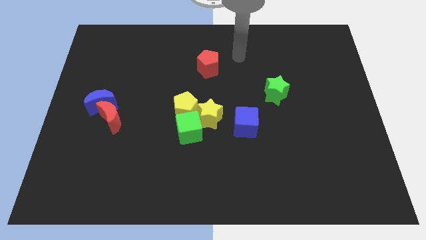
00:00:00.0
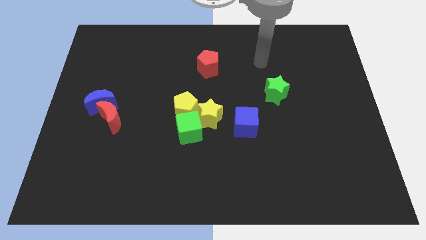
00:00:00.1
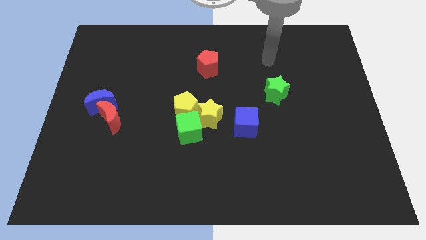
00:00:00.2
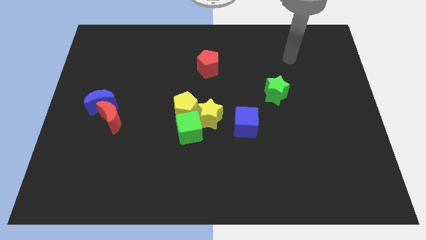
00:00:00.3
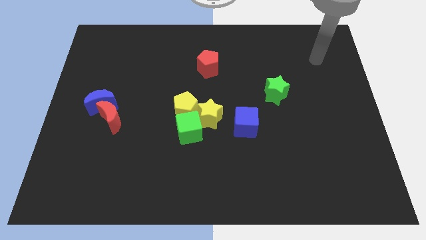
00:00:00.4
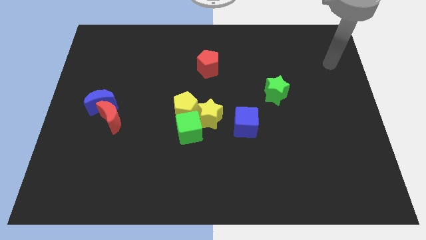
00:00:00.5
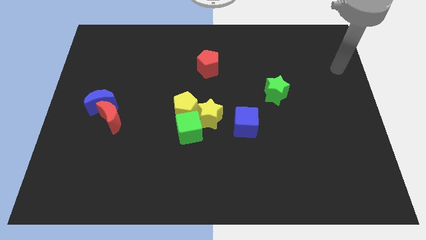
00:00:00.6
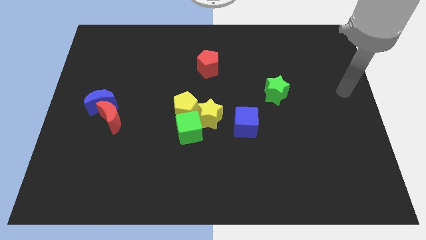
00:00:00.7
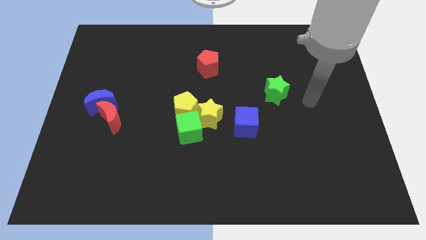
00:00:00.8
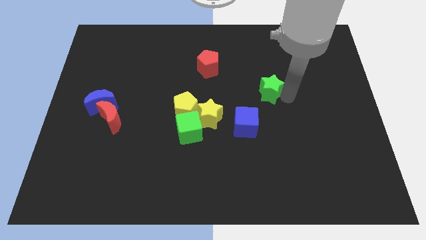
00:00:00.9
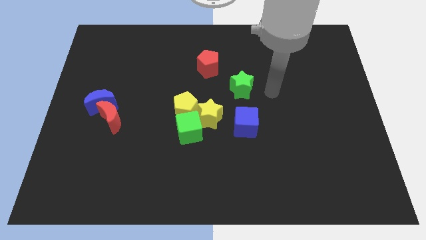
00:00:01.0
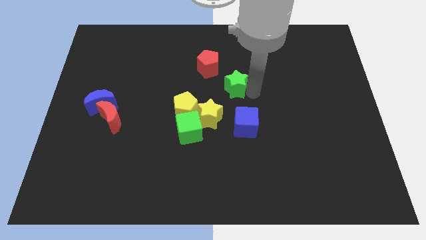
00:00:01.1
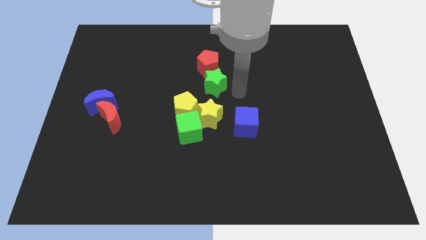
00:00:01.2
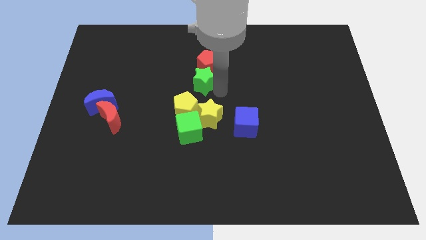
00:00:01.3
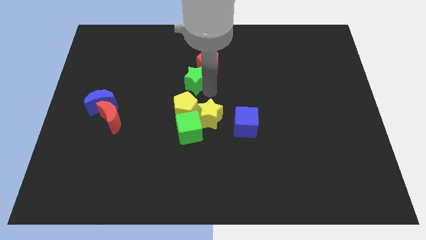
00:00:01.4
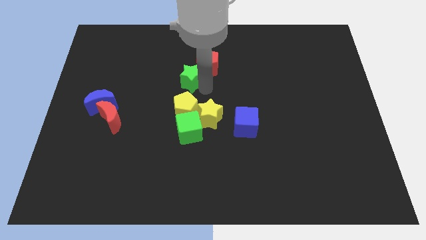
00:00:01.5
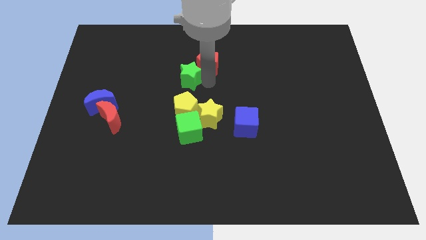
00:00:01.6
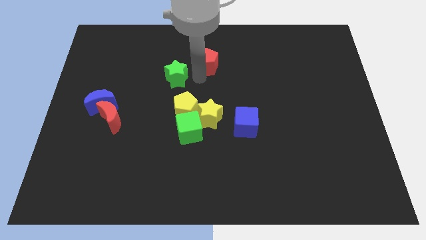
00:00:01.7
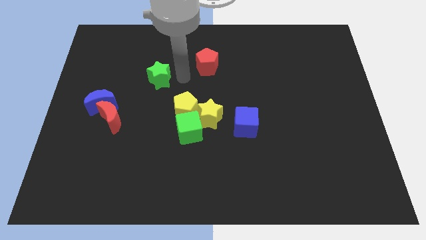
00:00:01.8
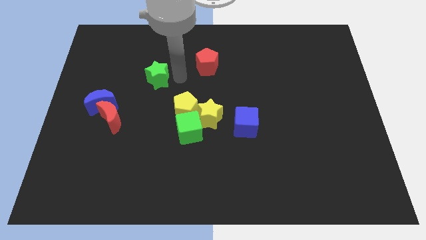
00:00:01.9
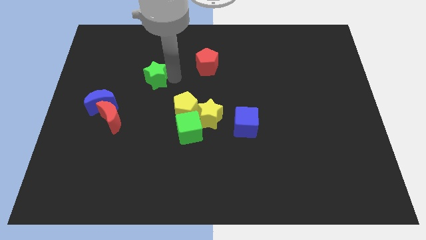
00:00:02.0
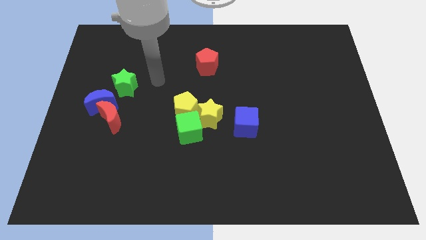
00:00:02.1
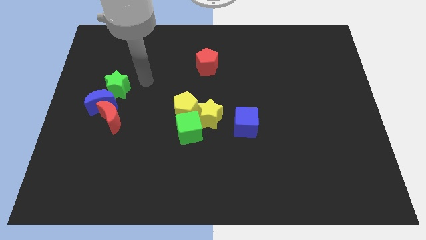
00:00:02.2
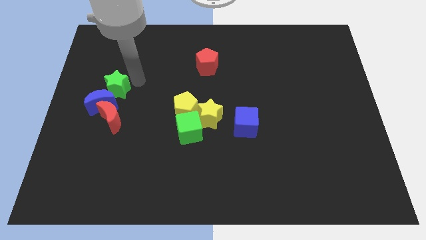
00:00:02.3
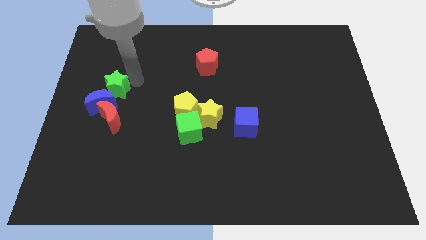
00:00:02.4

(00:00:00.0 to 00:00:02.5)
put the green star towards the blue moon

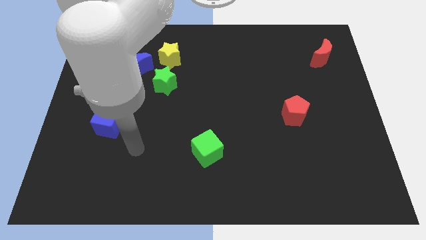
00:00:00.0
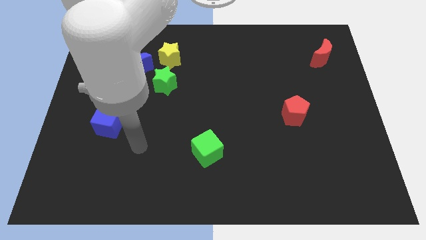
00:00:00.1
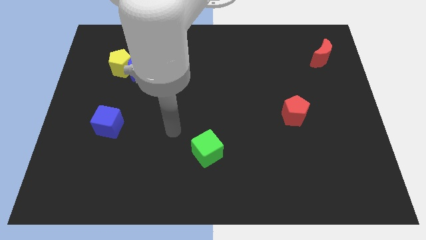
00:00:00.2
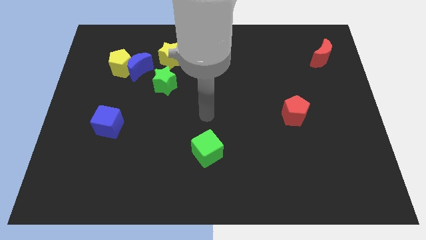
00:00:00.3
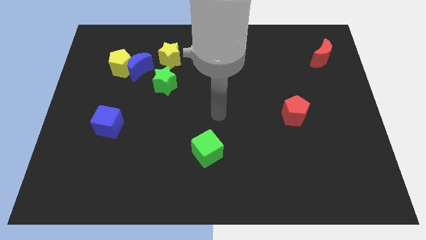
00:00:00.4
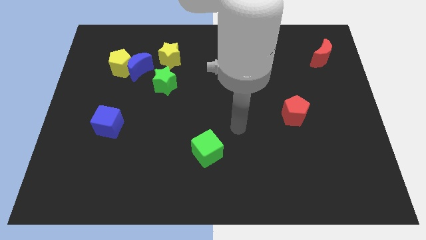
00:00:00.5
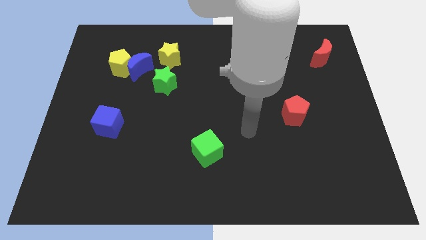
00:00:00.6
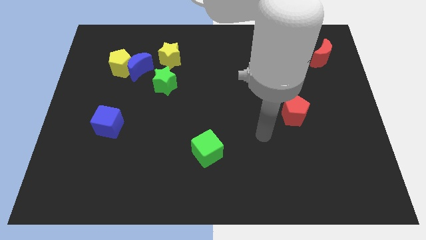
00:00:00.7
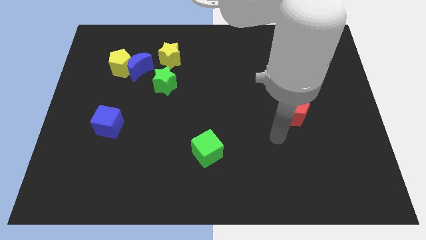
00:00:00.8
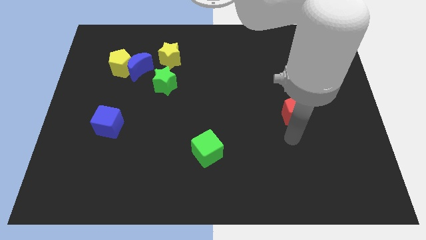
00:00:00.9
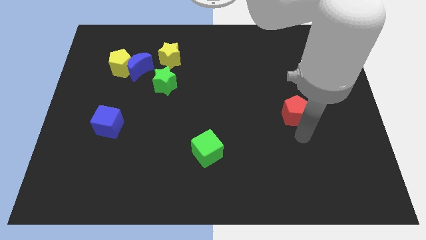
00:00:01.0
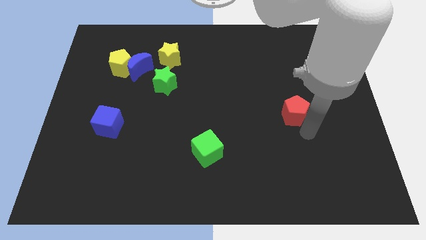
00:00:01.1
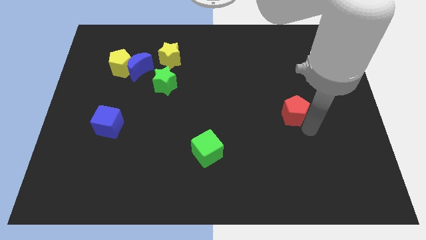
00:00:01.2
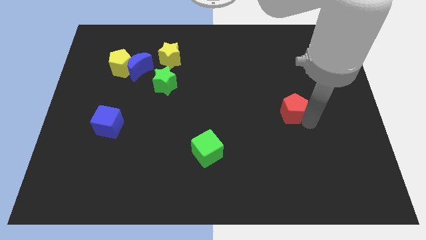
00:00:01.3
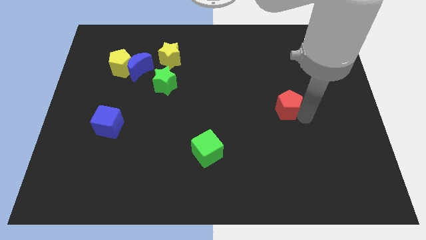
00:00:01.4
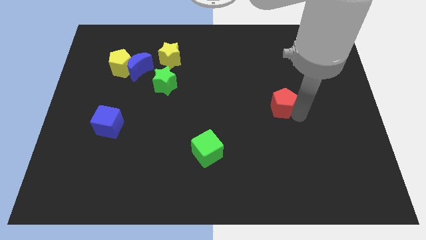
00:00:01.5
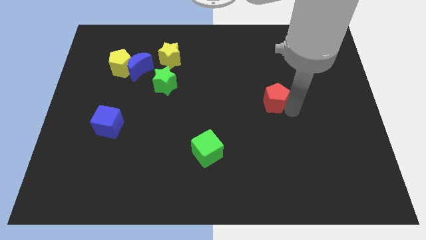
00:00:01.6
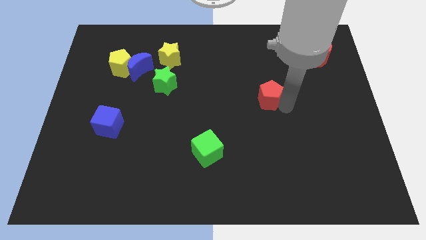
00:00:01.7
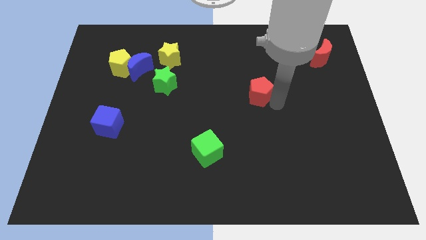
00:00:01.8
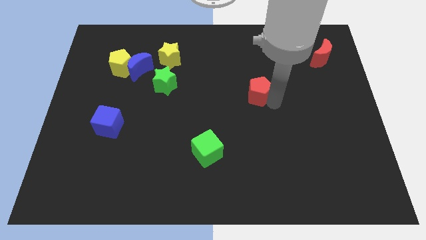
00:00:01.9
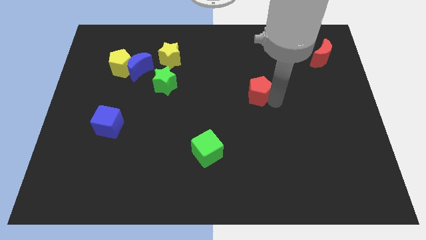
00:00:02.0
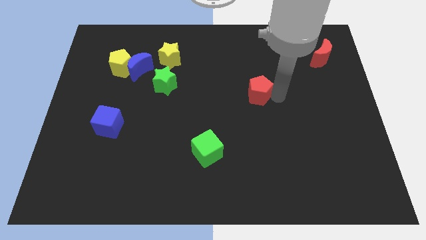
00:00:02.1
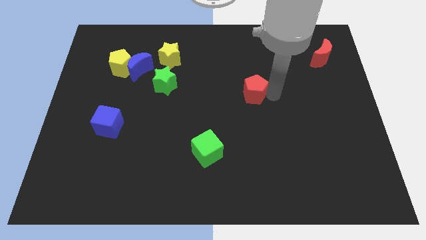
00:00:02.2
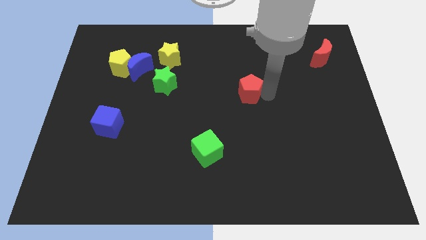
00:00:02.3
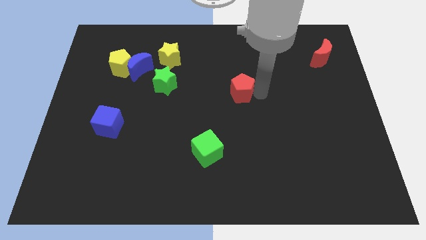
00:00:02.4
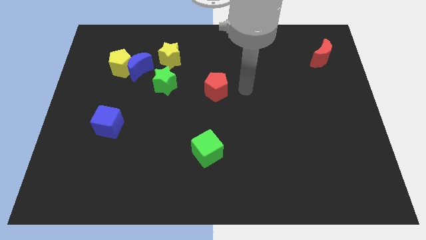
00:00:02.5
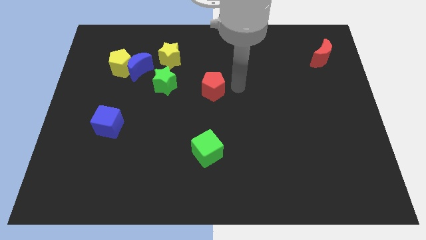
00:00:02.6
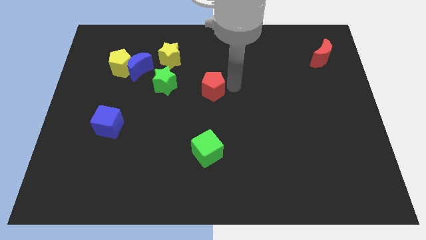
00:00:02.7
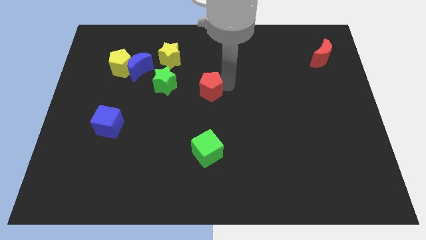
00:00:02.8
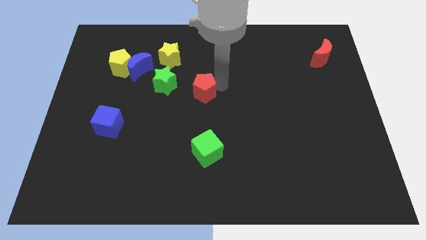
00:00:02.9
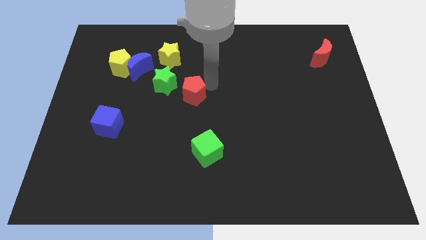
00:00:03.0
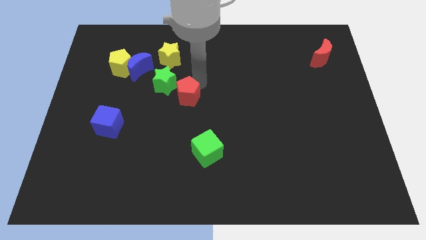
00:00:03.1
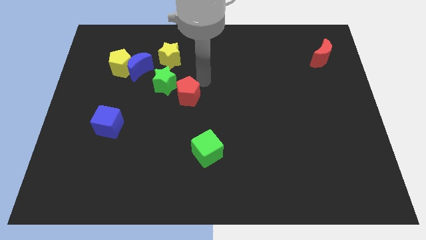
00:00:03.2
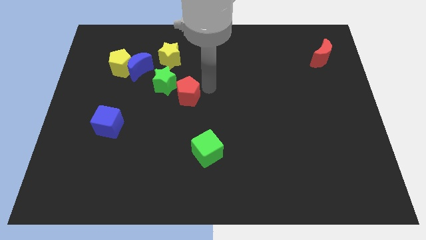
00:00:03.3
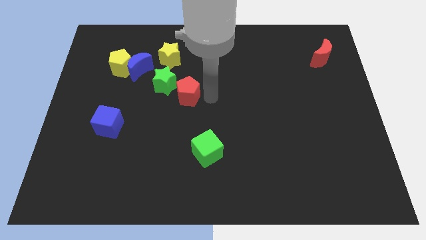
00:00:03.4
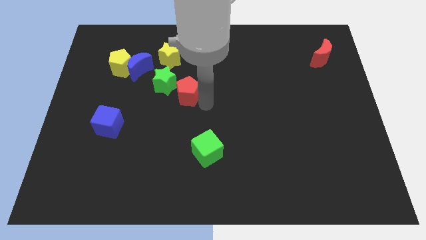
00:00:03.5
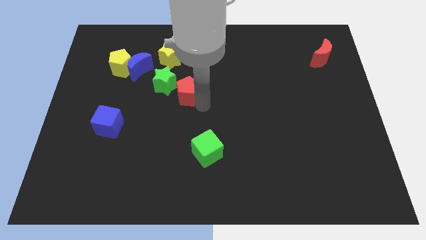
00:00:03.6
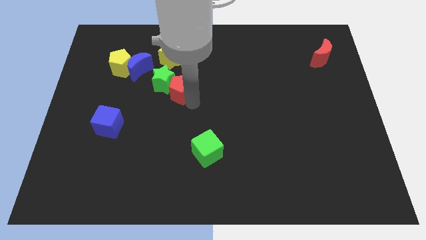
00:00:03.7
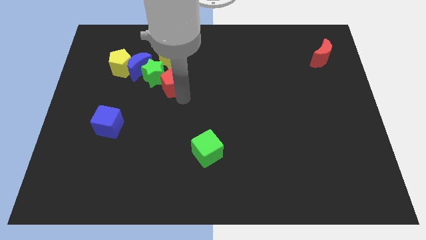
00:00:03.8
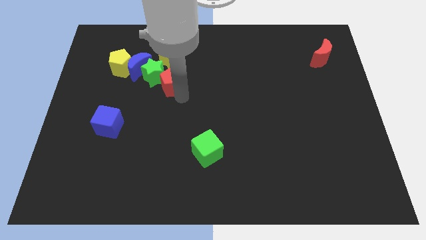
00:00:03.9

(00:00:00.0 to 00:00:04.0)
slide the red pentagon close to the green star

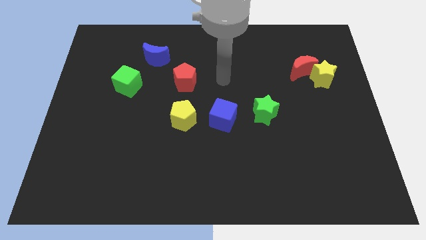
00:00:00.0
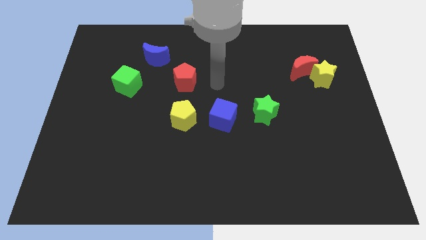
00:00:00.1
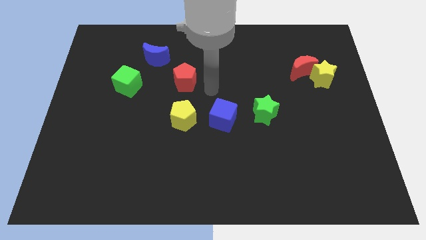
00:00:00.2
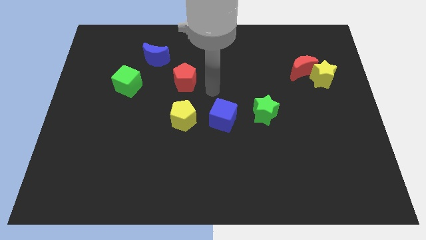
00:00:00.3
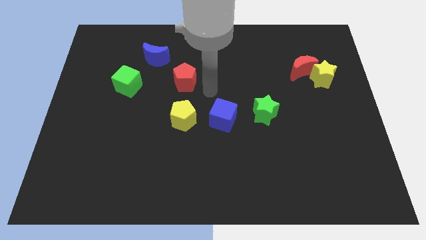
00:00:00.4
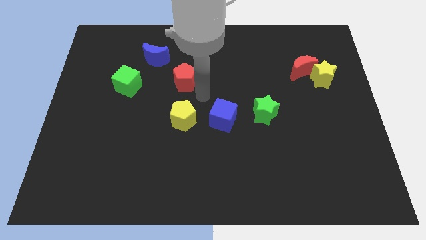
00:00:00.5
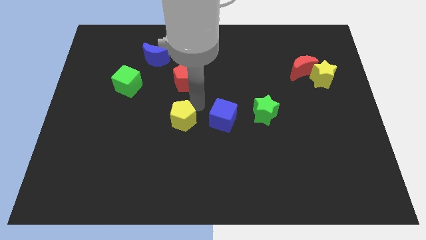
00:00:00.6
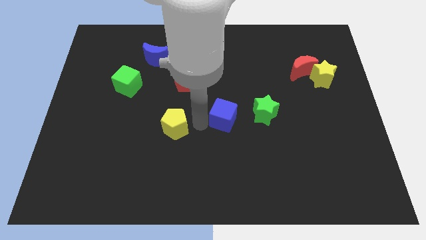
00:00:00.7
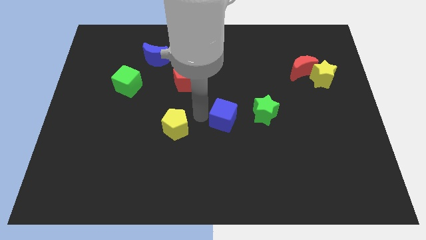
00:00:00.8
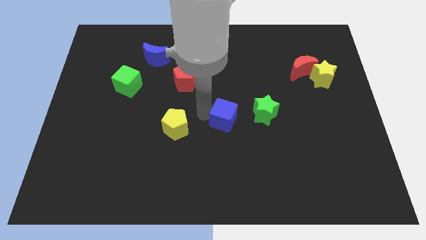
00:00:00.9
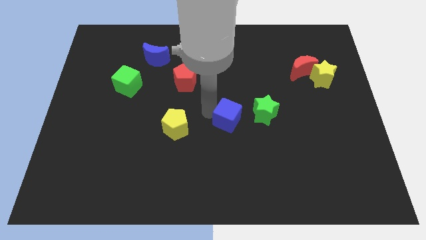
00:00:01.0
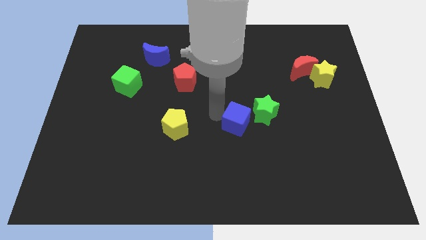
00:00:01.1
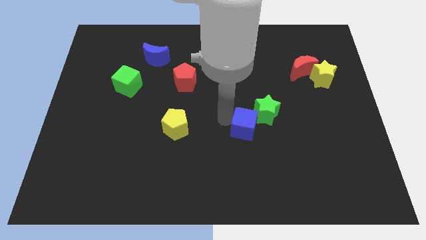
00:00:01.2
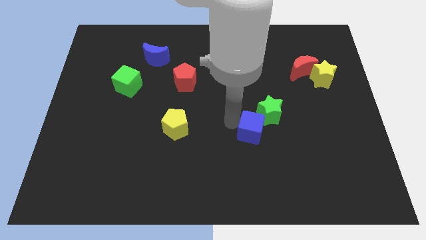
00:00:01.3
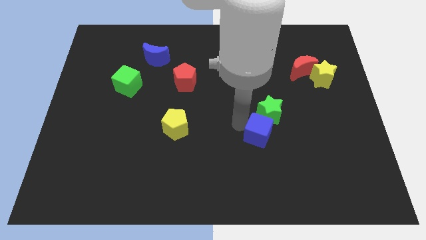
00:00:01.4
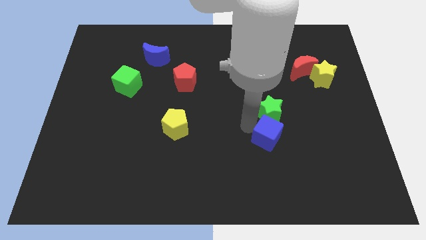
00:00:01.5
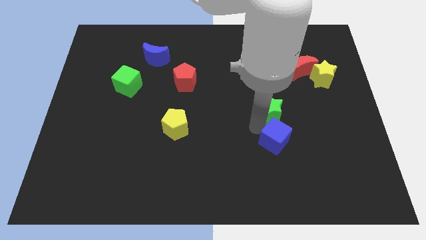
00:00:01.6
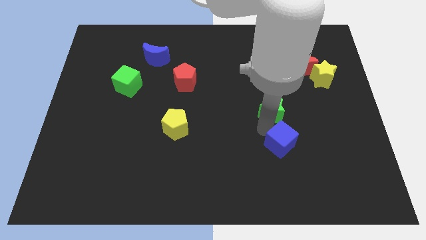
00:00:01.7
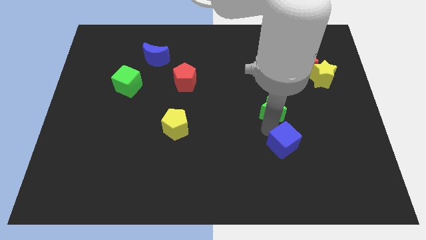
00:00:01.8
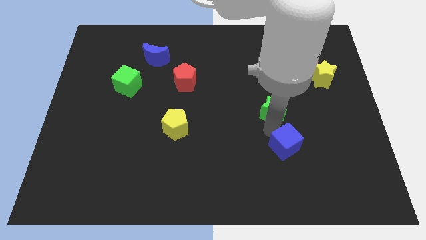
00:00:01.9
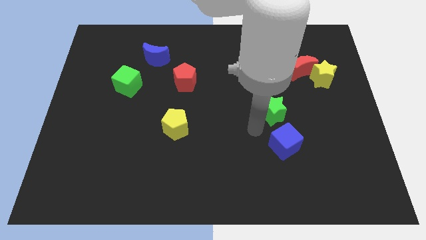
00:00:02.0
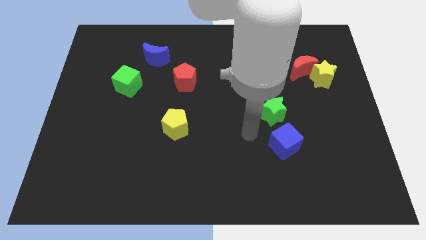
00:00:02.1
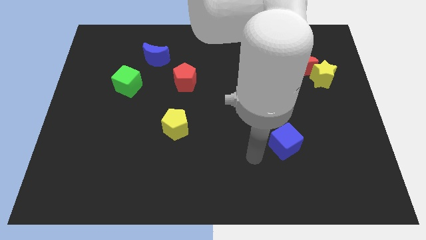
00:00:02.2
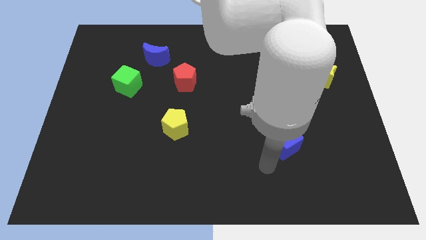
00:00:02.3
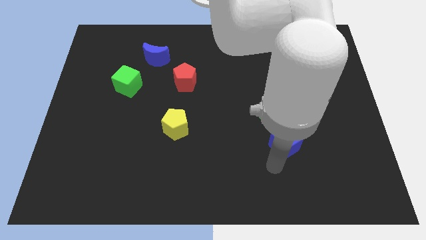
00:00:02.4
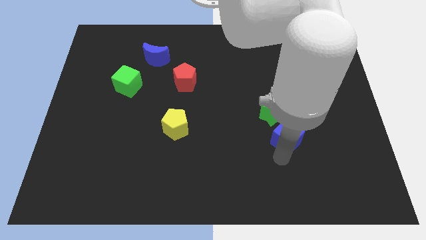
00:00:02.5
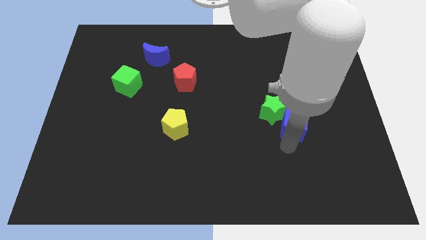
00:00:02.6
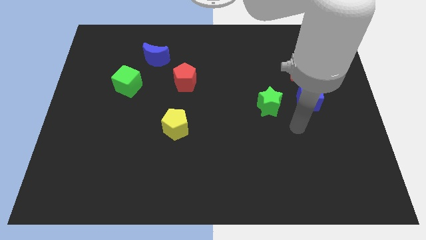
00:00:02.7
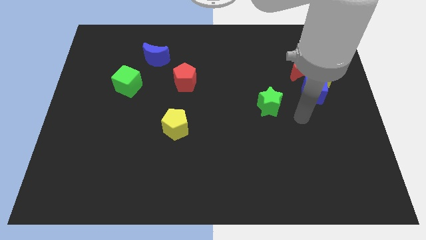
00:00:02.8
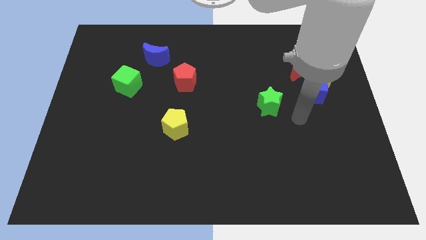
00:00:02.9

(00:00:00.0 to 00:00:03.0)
move the blue cube towards the yellow star
